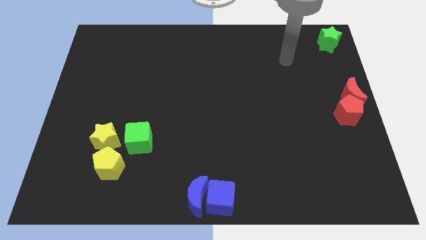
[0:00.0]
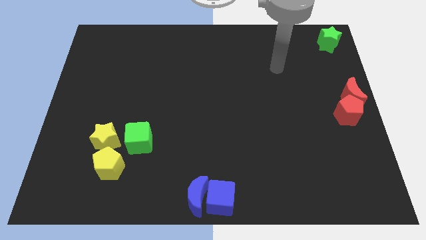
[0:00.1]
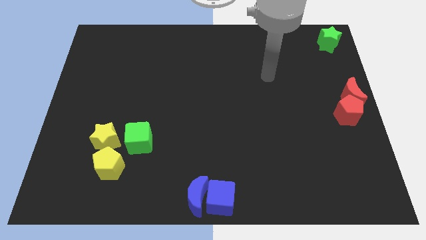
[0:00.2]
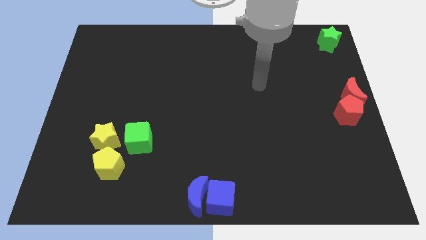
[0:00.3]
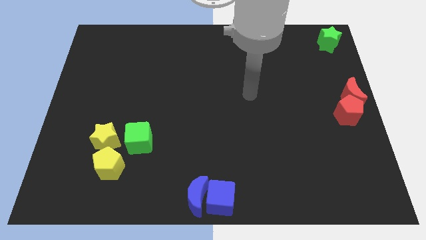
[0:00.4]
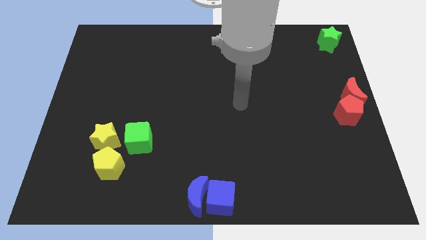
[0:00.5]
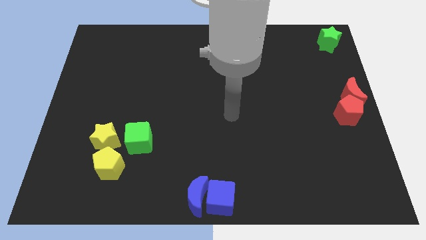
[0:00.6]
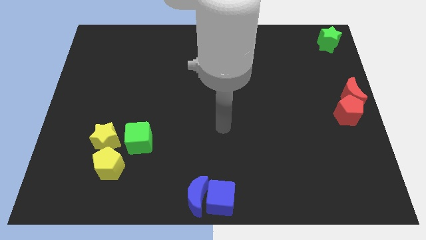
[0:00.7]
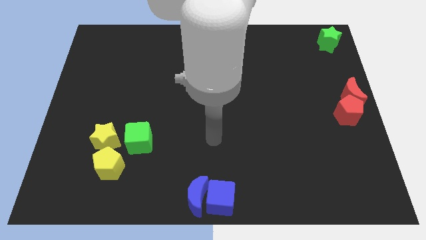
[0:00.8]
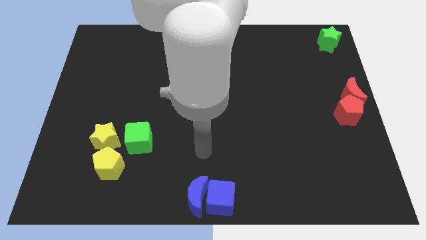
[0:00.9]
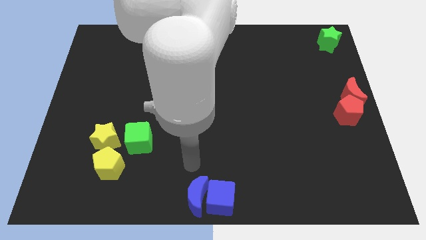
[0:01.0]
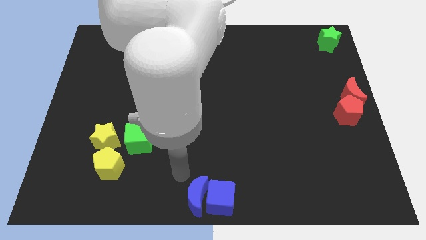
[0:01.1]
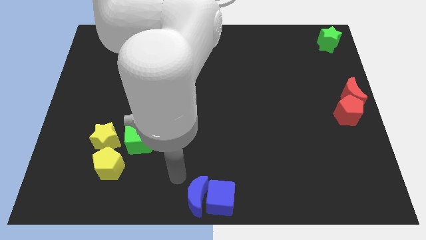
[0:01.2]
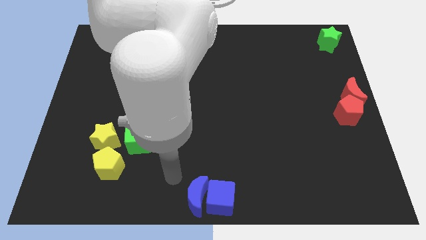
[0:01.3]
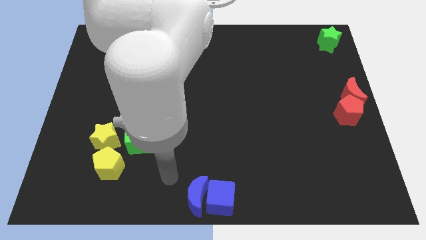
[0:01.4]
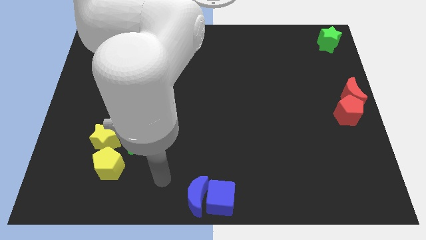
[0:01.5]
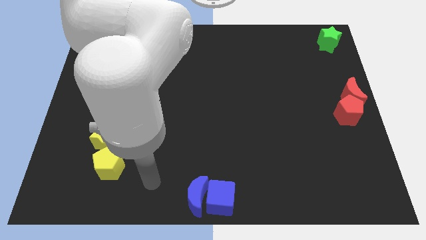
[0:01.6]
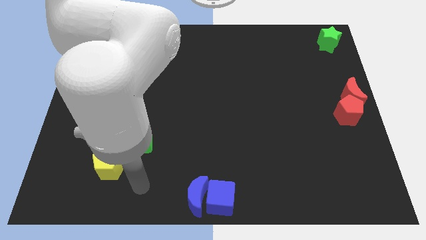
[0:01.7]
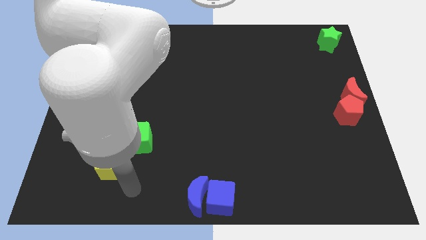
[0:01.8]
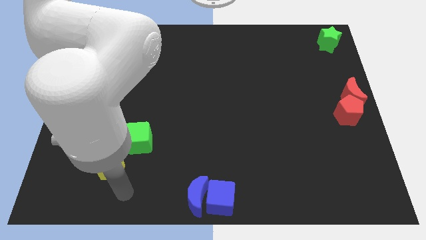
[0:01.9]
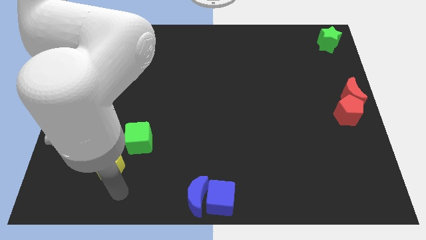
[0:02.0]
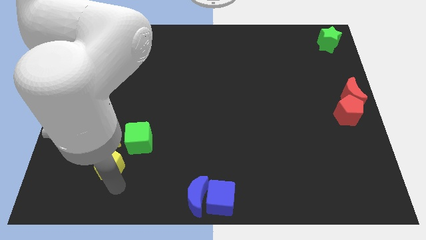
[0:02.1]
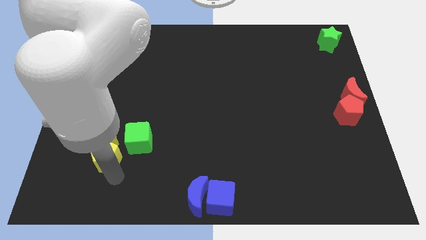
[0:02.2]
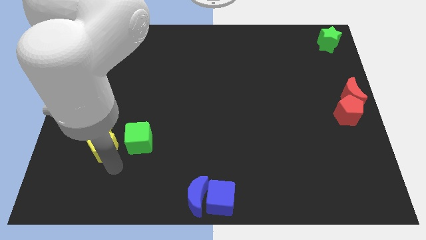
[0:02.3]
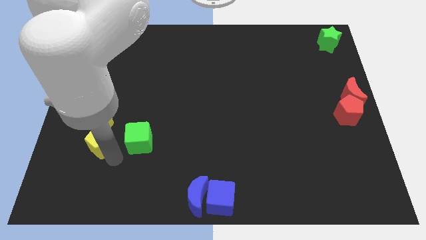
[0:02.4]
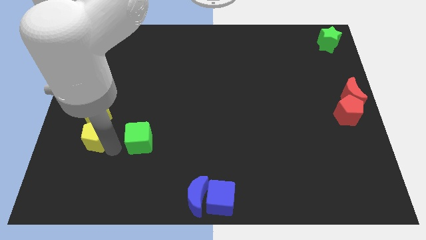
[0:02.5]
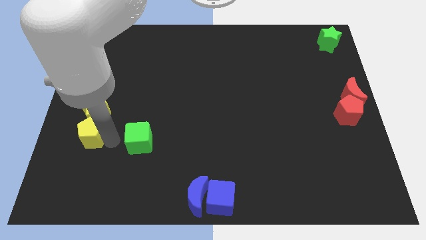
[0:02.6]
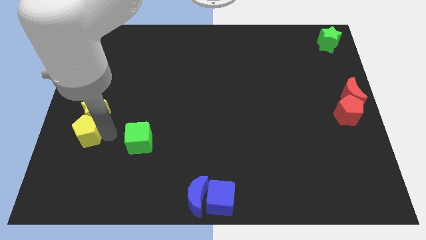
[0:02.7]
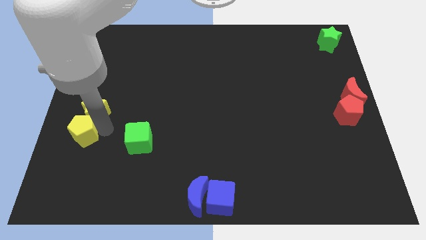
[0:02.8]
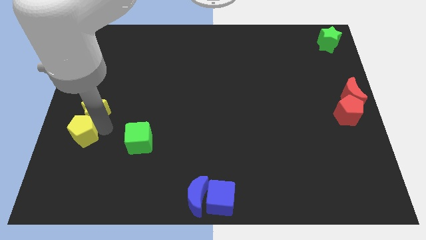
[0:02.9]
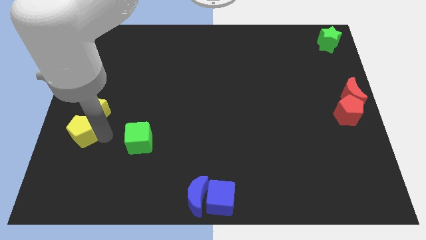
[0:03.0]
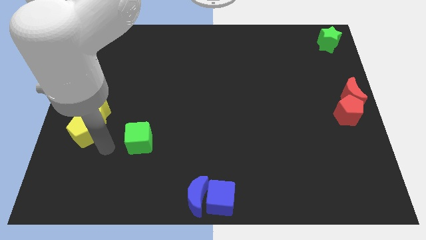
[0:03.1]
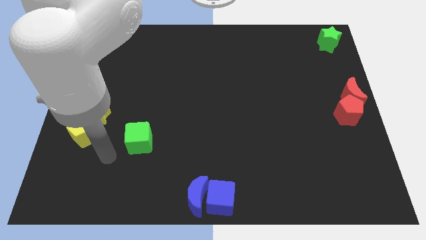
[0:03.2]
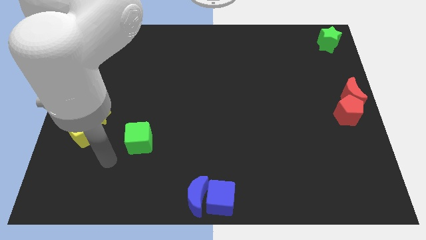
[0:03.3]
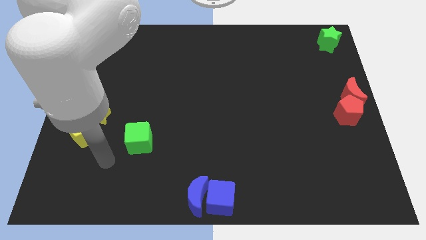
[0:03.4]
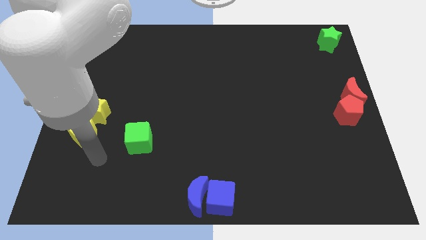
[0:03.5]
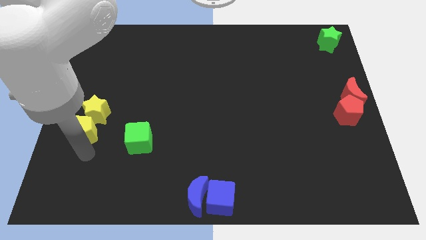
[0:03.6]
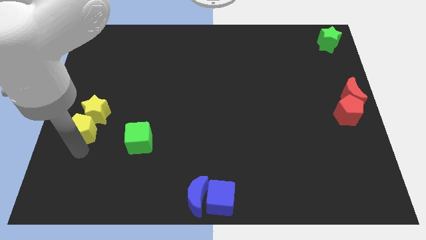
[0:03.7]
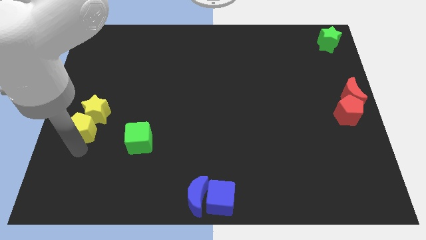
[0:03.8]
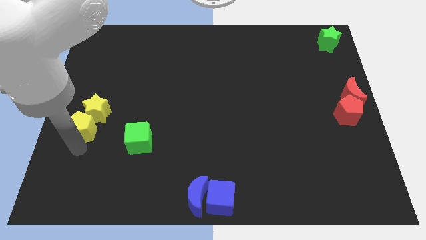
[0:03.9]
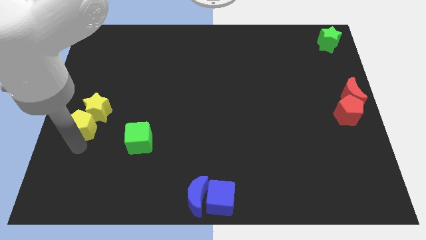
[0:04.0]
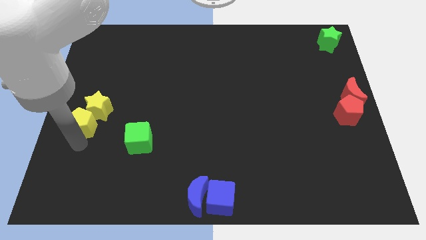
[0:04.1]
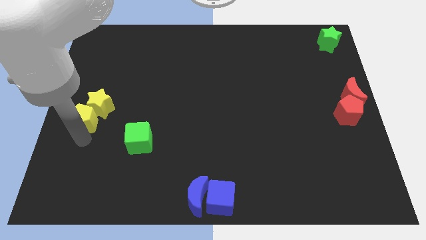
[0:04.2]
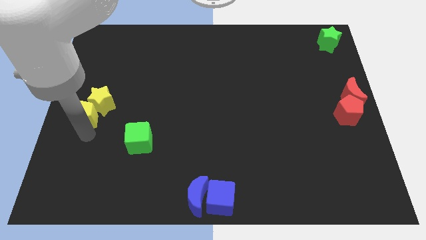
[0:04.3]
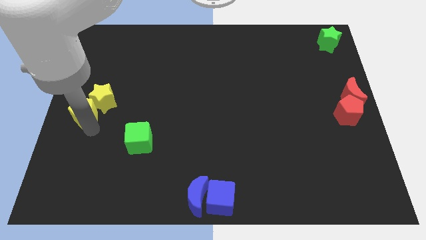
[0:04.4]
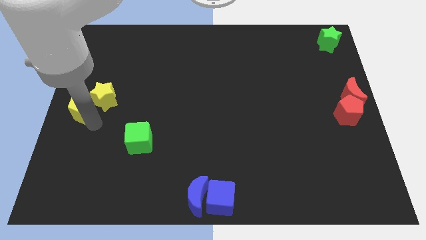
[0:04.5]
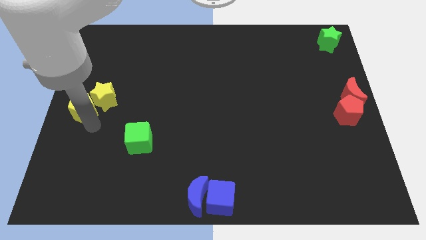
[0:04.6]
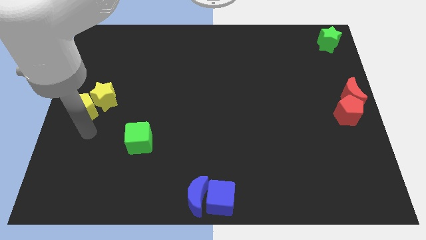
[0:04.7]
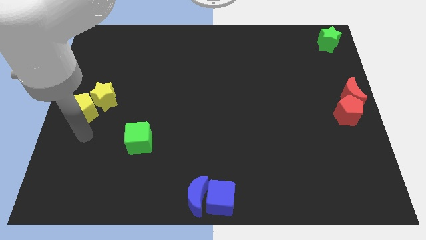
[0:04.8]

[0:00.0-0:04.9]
move arm near yellow pentagon

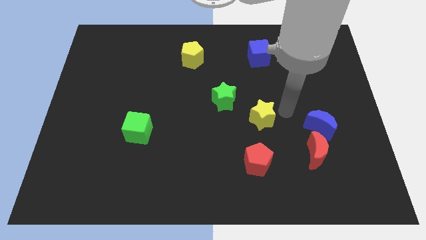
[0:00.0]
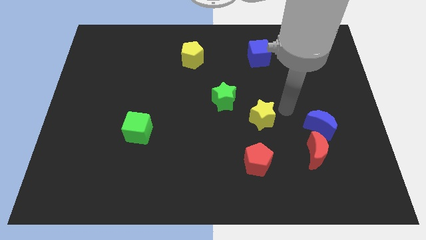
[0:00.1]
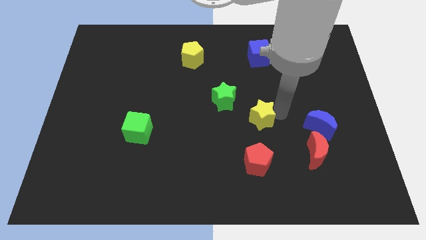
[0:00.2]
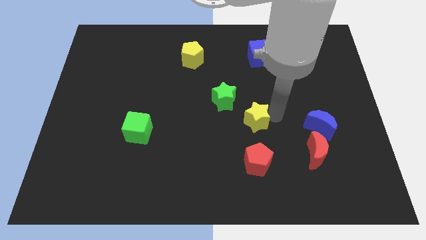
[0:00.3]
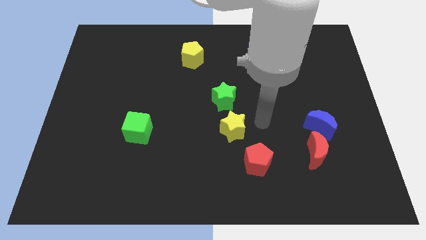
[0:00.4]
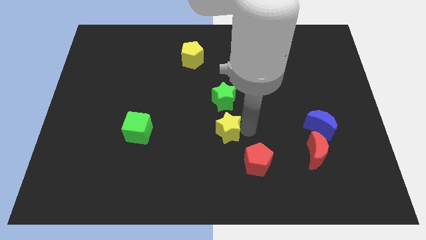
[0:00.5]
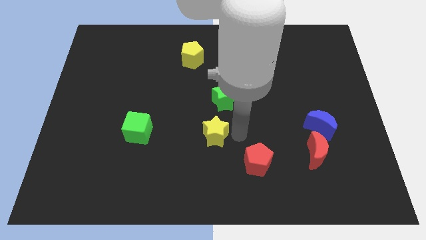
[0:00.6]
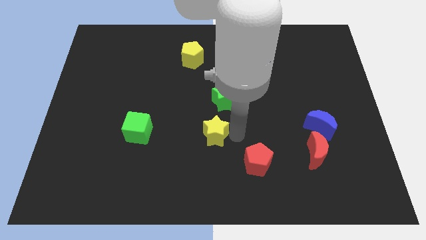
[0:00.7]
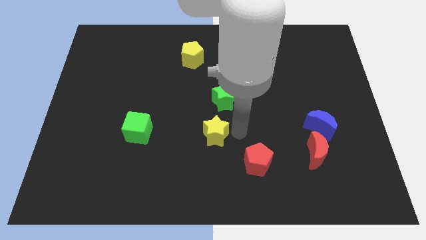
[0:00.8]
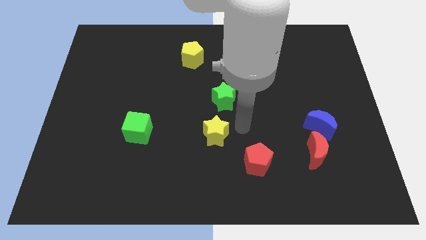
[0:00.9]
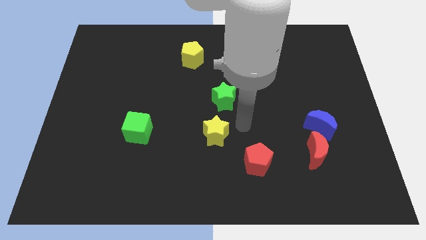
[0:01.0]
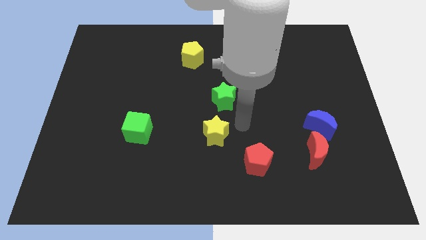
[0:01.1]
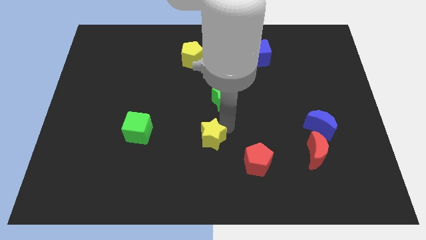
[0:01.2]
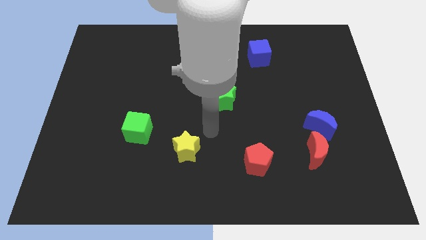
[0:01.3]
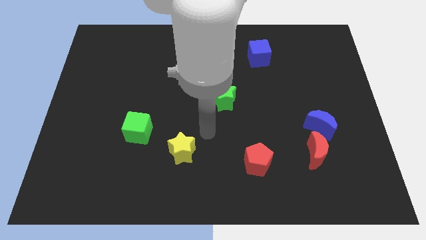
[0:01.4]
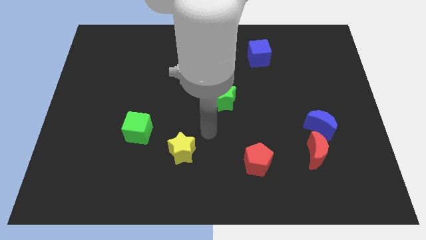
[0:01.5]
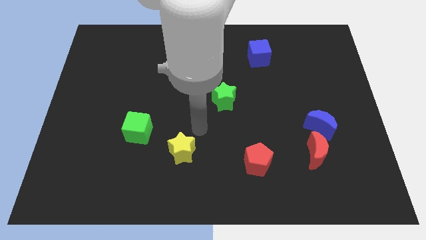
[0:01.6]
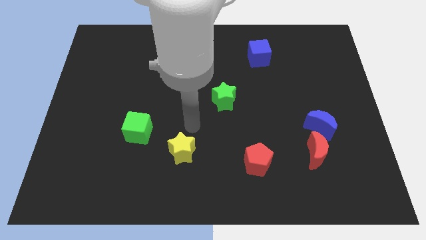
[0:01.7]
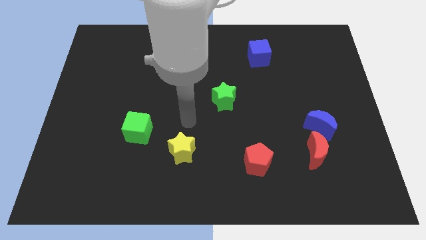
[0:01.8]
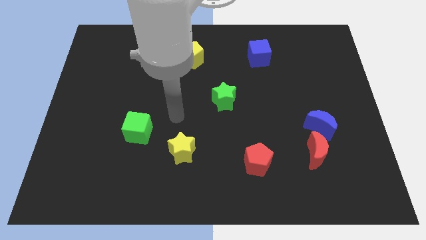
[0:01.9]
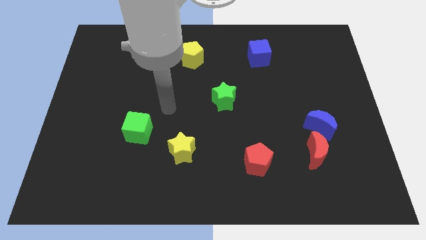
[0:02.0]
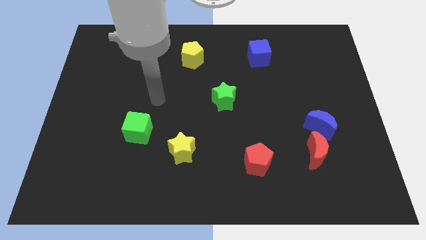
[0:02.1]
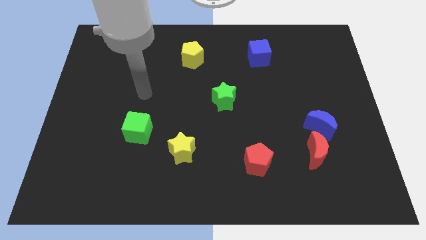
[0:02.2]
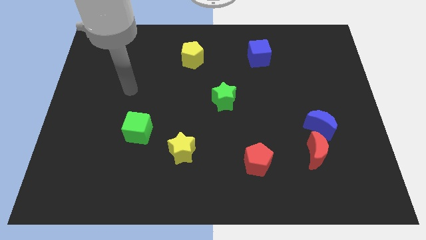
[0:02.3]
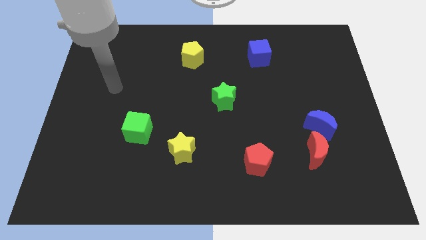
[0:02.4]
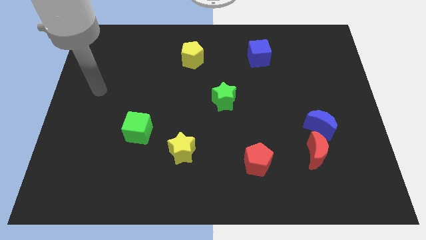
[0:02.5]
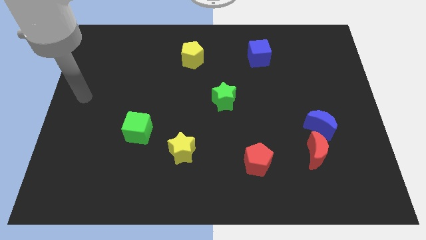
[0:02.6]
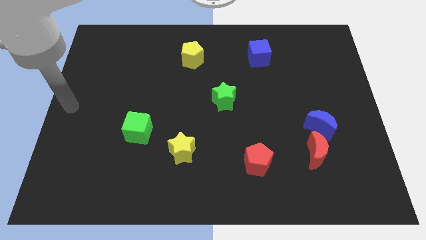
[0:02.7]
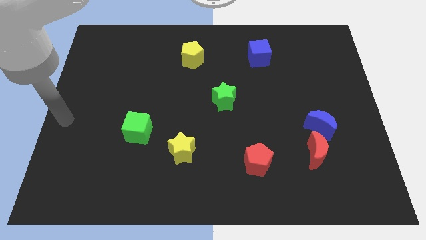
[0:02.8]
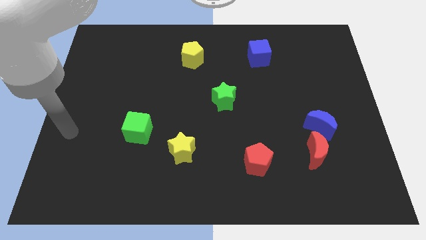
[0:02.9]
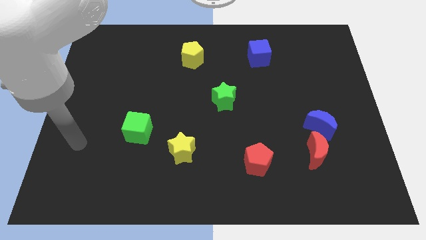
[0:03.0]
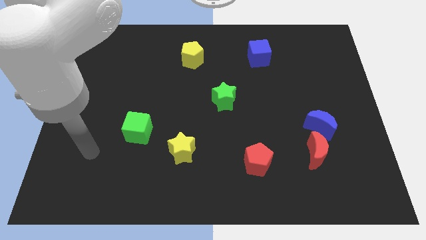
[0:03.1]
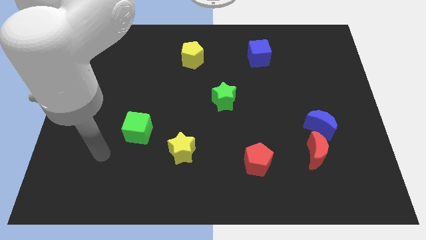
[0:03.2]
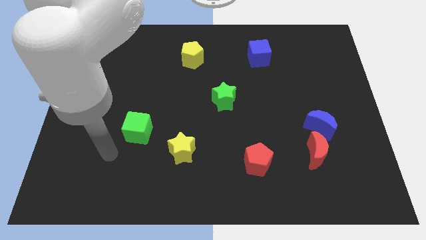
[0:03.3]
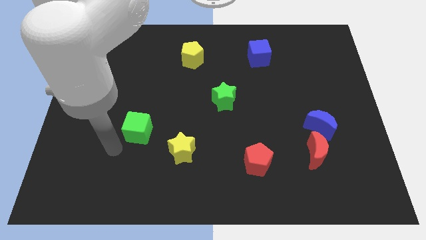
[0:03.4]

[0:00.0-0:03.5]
move the yellow star parallel left to the red pentagon

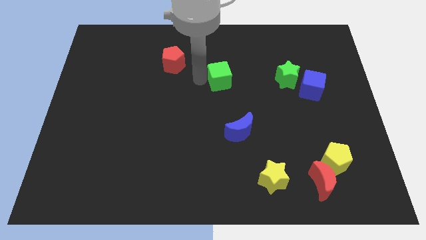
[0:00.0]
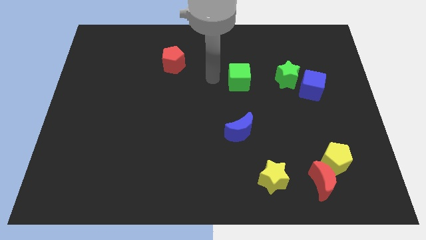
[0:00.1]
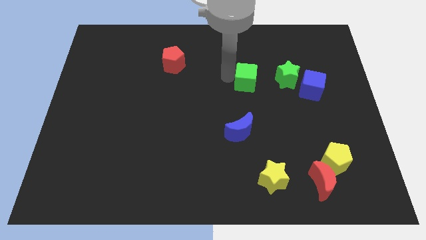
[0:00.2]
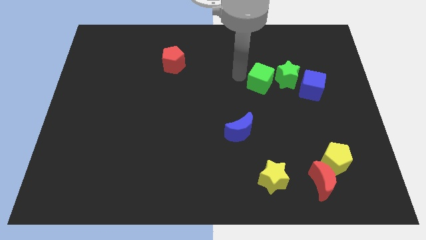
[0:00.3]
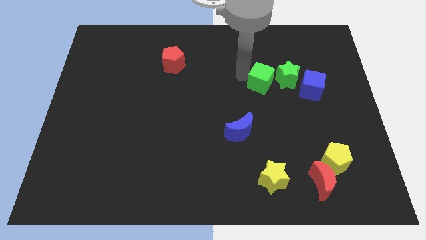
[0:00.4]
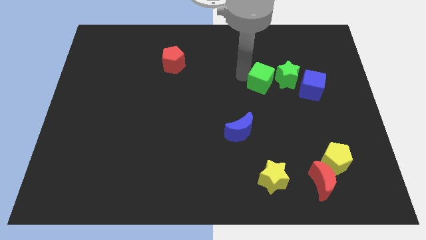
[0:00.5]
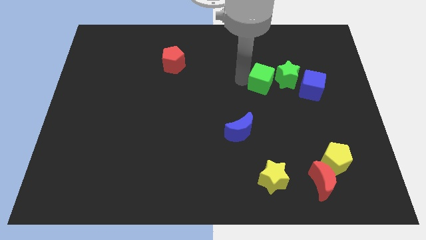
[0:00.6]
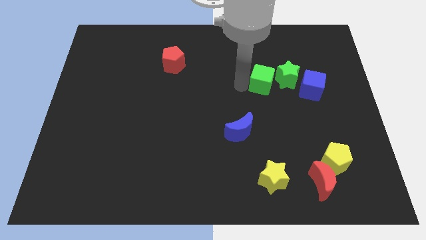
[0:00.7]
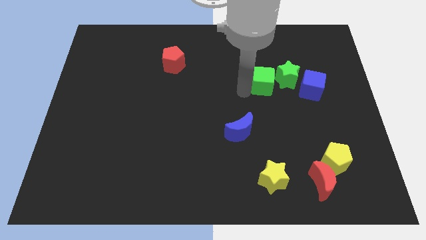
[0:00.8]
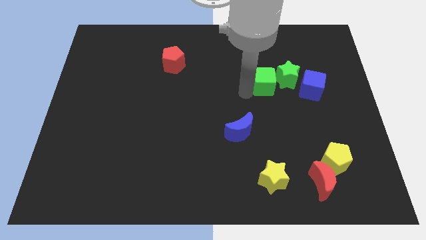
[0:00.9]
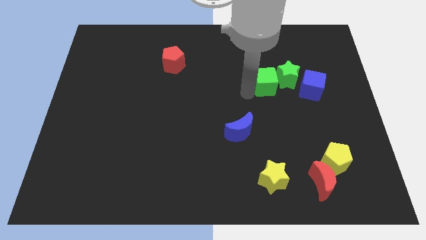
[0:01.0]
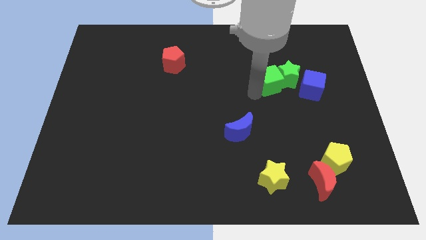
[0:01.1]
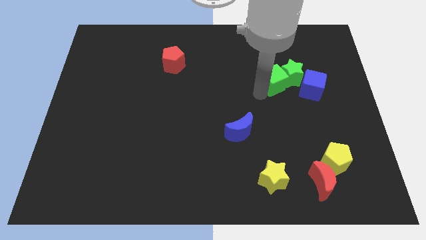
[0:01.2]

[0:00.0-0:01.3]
push the green cube into the green star
